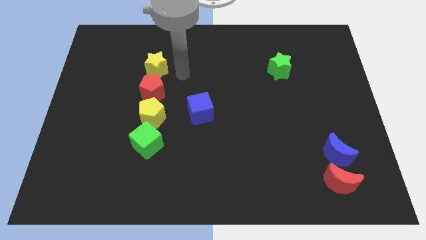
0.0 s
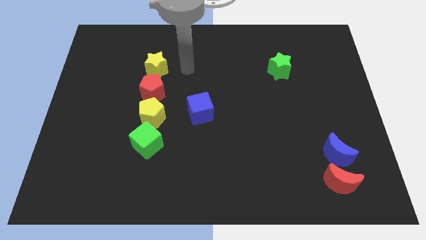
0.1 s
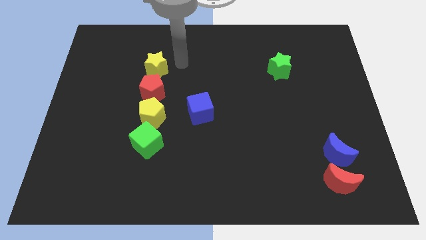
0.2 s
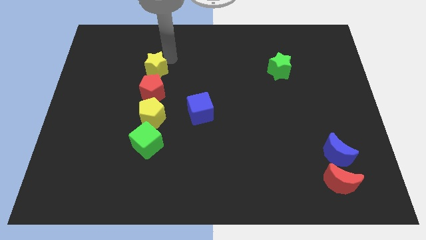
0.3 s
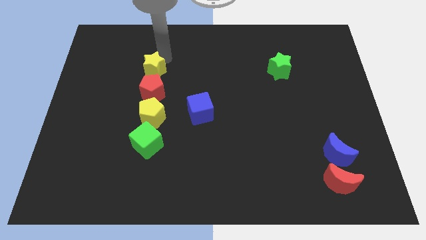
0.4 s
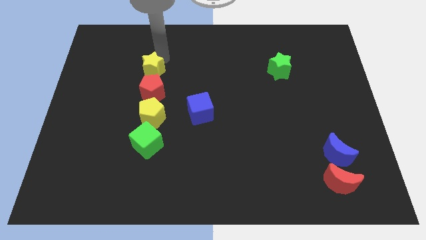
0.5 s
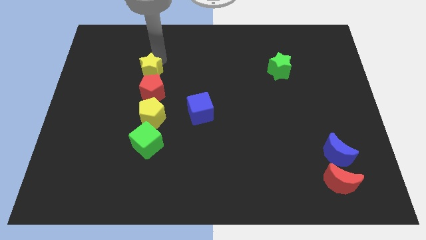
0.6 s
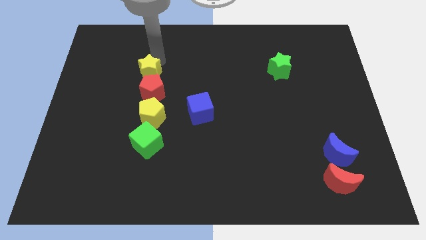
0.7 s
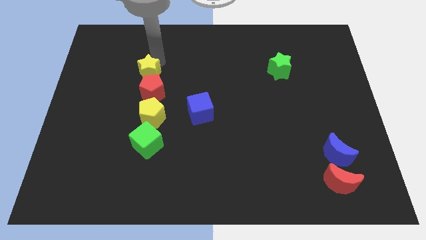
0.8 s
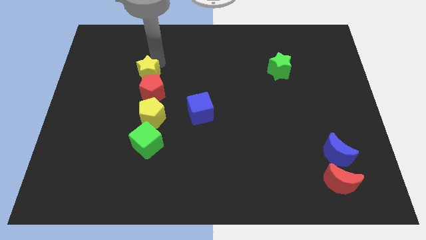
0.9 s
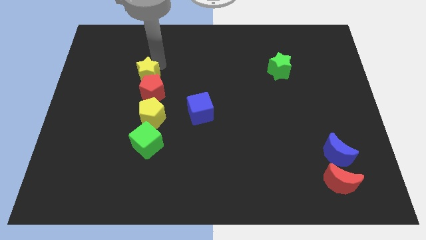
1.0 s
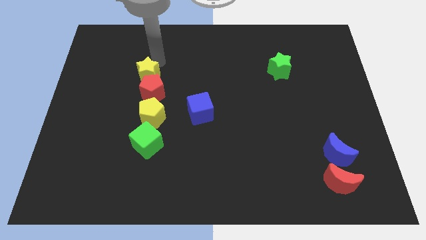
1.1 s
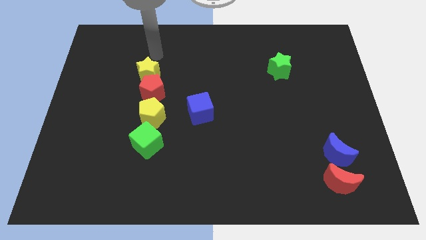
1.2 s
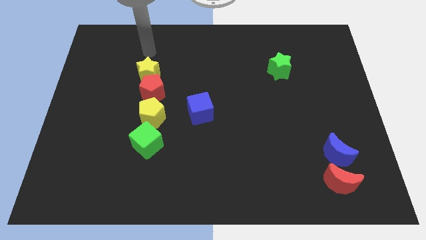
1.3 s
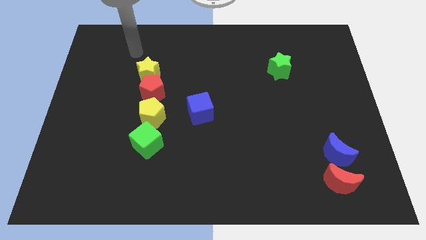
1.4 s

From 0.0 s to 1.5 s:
push the yellow star into red pentagon

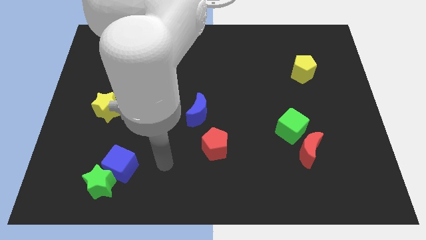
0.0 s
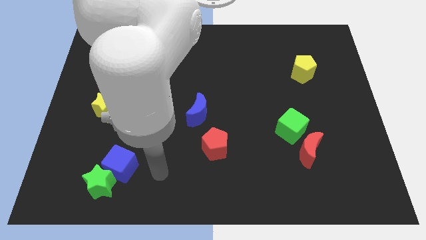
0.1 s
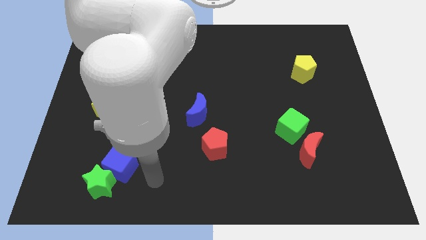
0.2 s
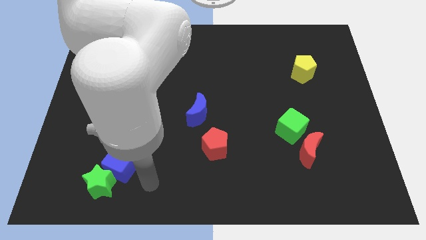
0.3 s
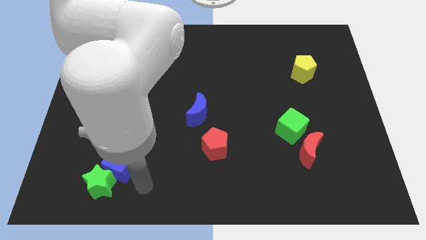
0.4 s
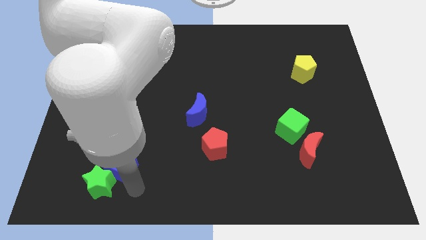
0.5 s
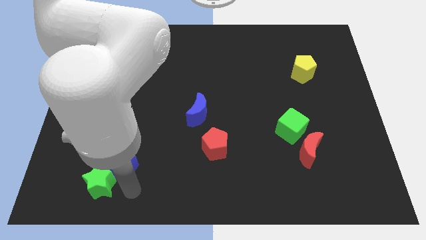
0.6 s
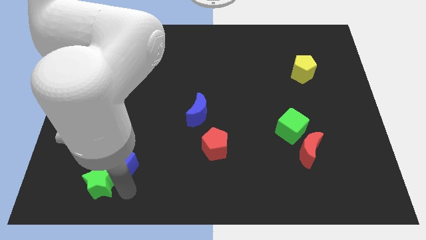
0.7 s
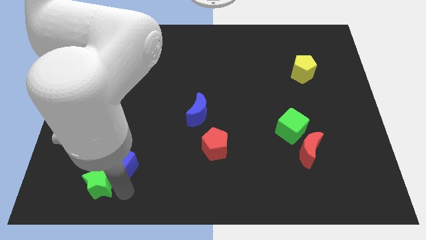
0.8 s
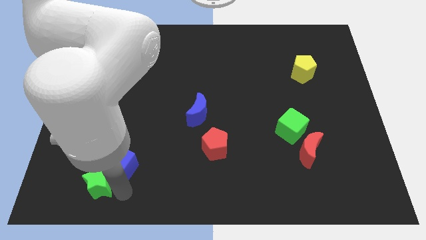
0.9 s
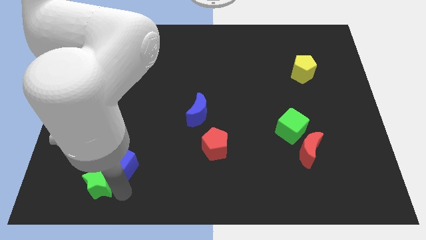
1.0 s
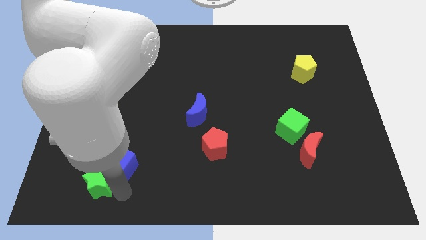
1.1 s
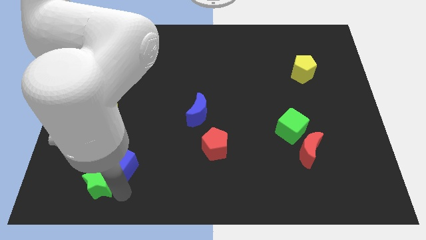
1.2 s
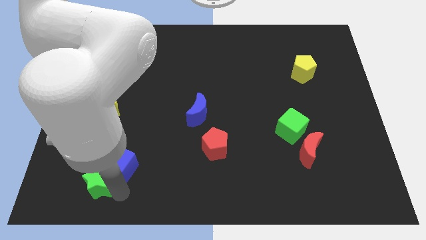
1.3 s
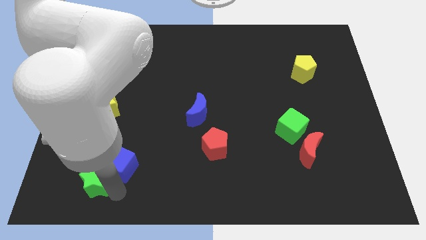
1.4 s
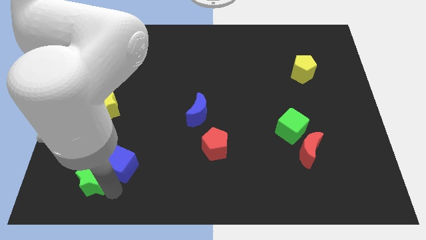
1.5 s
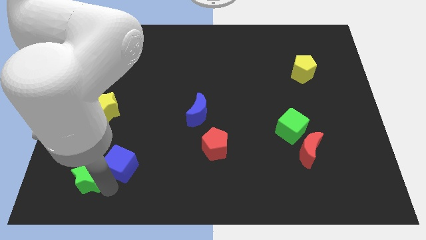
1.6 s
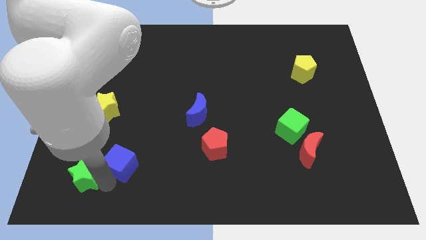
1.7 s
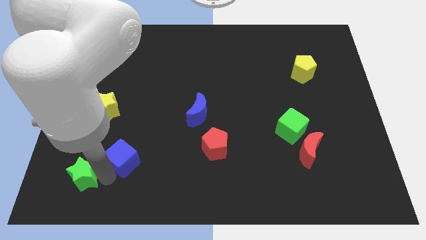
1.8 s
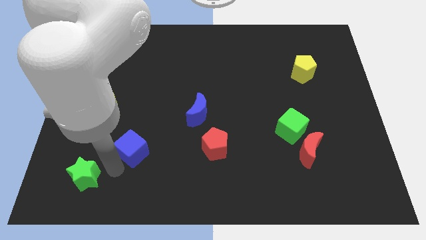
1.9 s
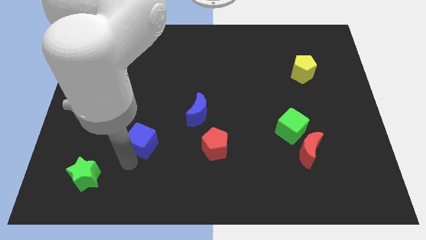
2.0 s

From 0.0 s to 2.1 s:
separate the green star and blue cube to each other

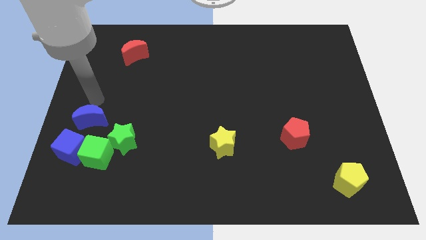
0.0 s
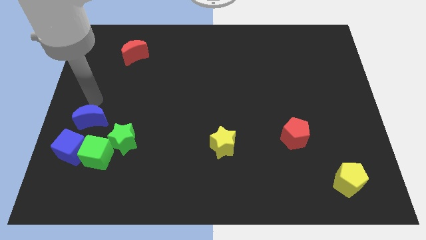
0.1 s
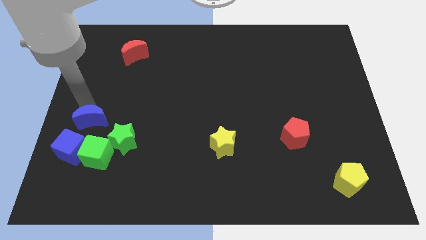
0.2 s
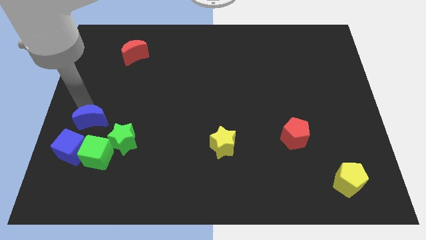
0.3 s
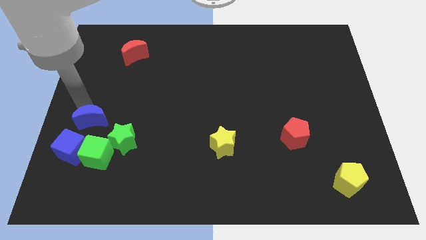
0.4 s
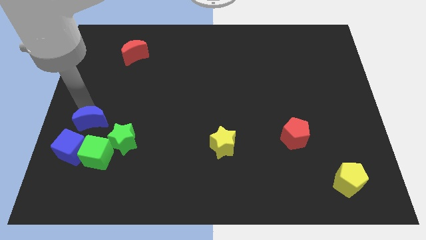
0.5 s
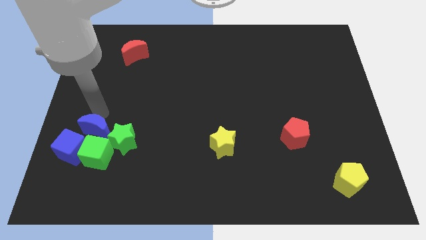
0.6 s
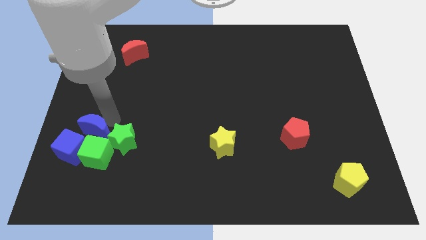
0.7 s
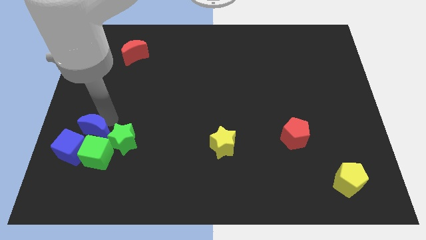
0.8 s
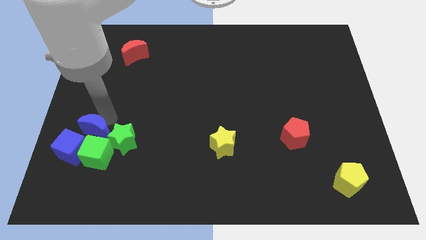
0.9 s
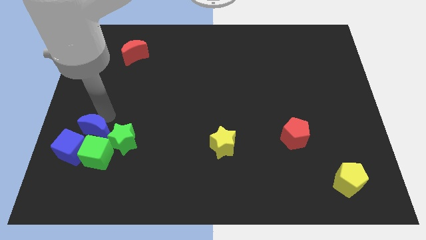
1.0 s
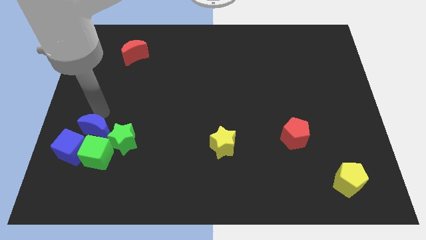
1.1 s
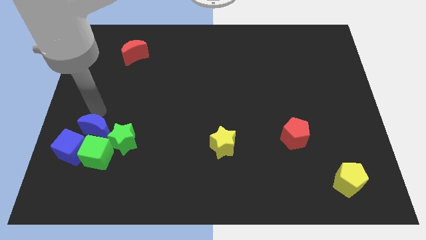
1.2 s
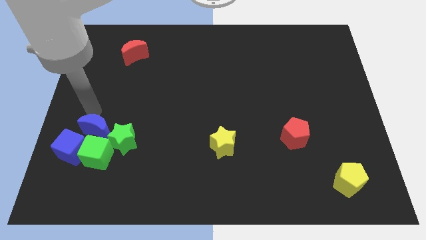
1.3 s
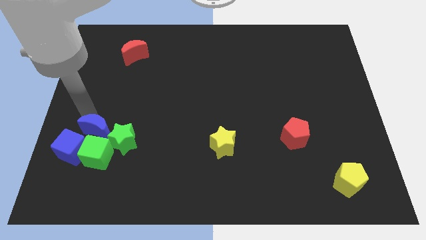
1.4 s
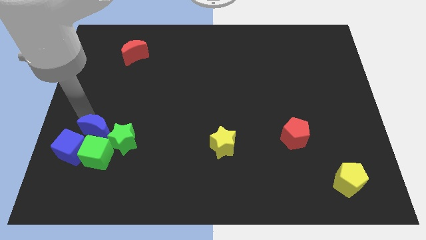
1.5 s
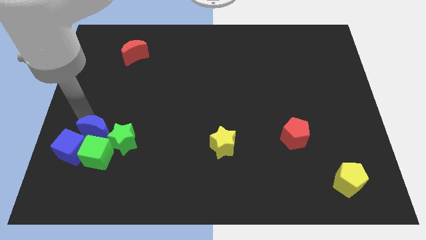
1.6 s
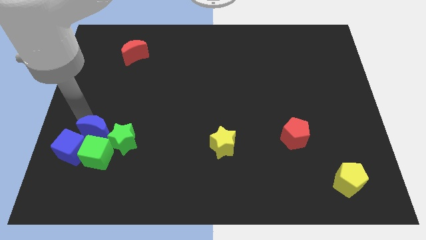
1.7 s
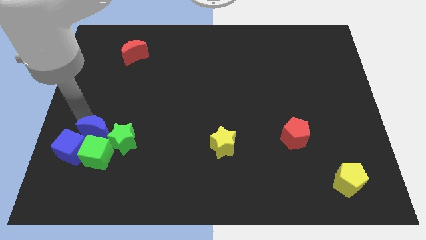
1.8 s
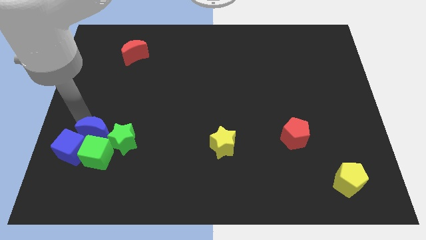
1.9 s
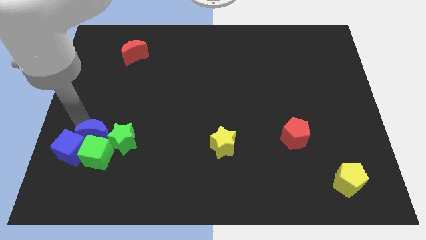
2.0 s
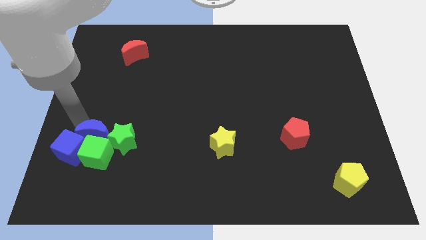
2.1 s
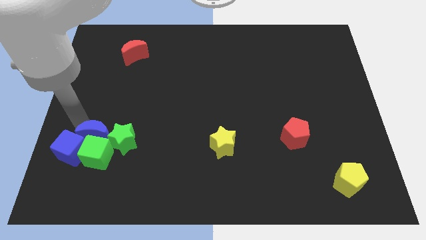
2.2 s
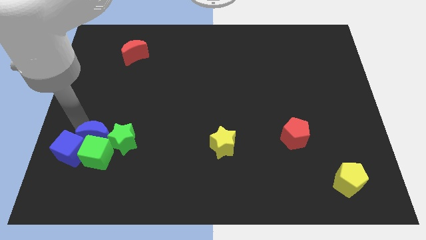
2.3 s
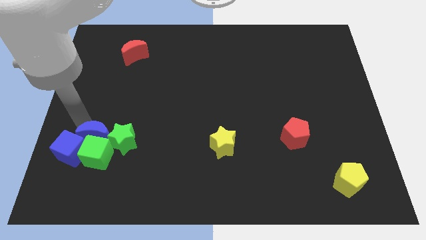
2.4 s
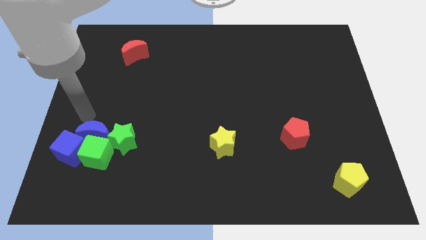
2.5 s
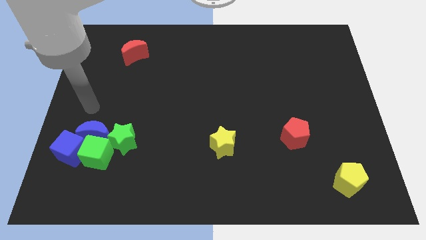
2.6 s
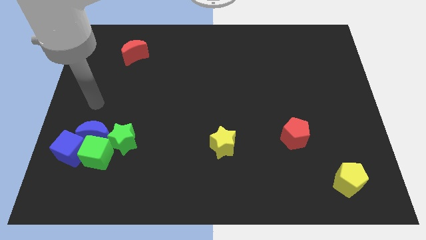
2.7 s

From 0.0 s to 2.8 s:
push the blue moon into blue and green cubes on top

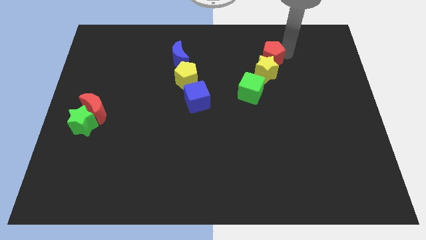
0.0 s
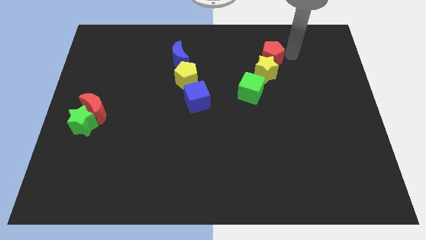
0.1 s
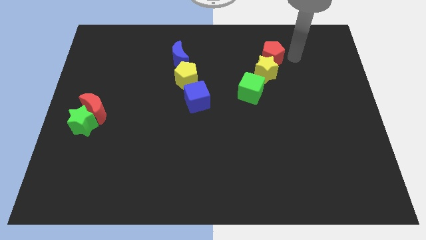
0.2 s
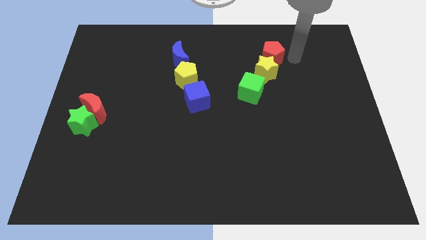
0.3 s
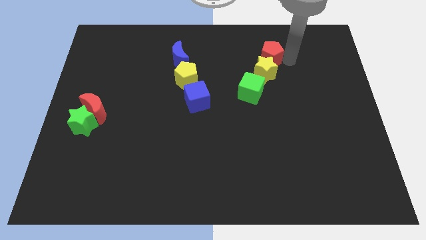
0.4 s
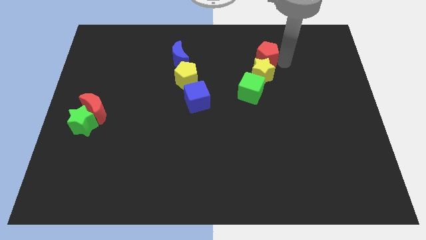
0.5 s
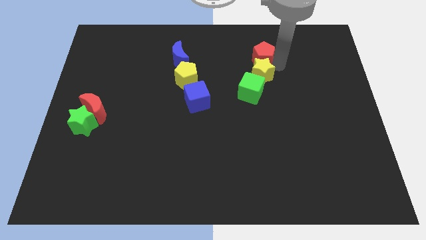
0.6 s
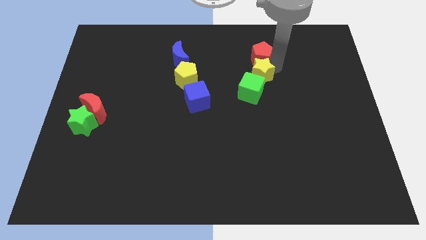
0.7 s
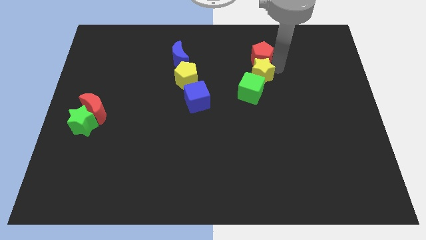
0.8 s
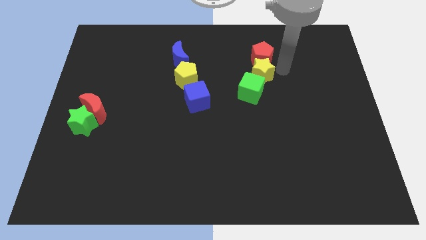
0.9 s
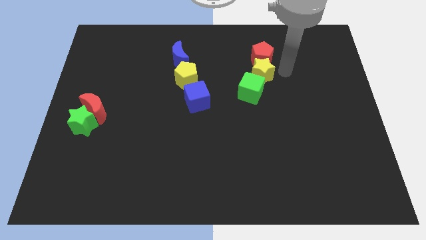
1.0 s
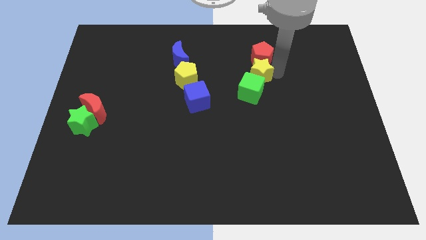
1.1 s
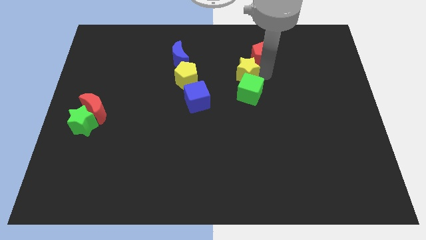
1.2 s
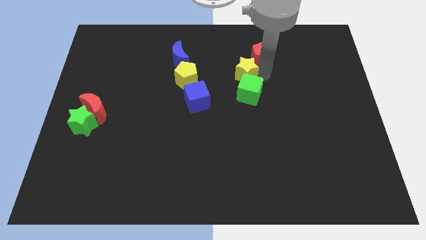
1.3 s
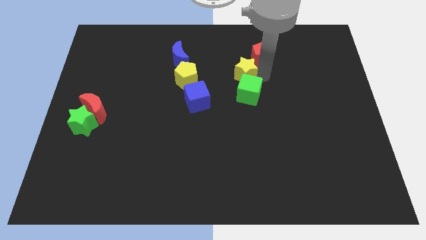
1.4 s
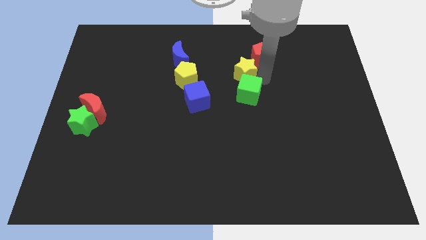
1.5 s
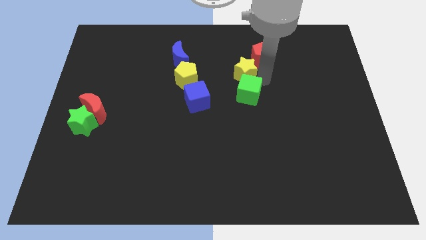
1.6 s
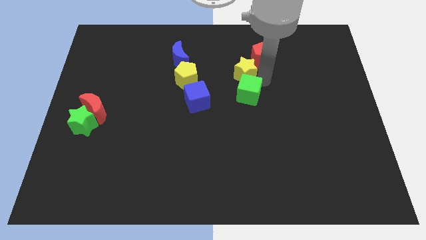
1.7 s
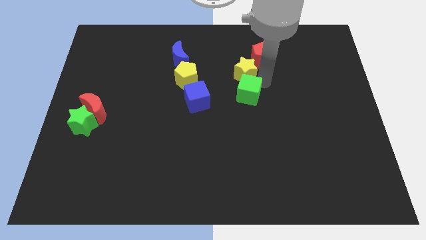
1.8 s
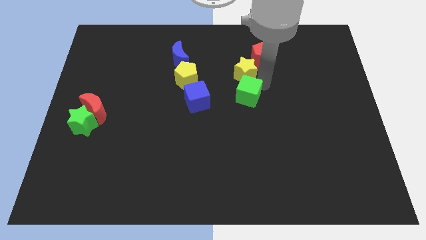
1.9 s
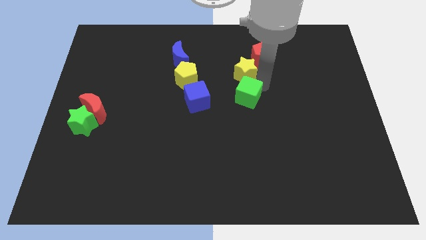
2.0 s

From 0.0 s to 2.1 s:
slightly adjust the red pentagon yellow star green cube towards left side

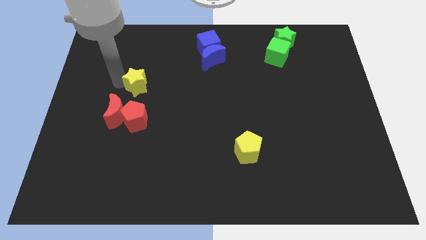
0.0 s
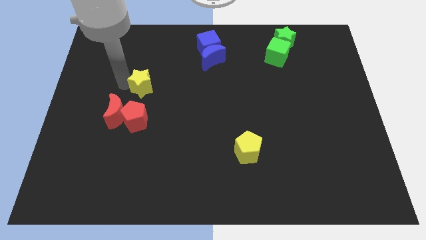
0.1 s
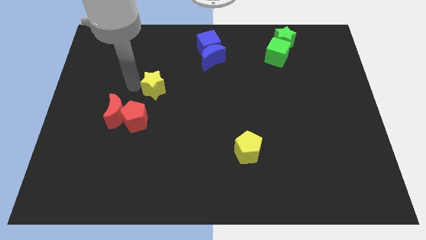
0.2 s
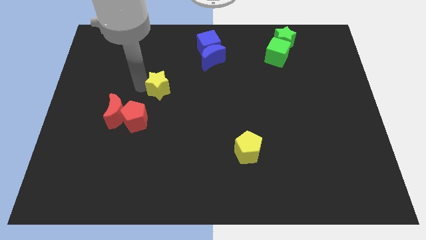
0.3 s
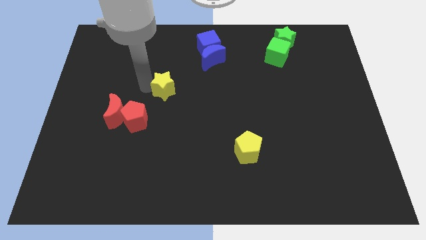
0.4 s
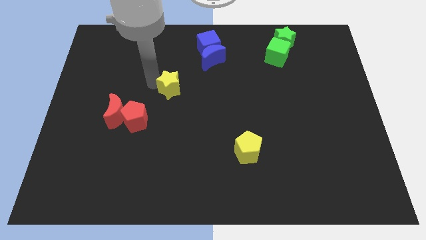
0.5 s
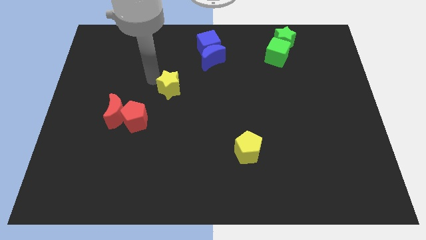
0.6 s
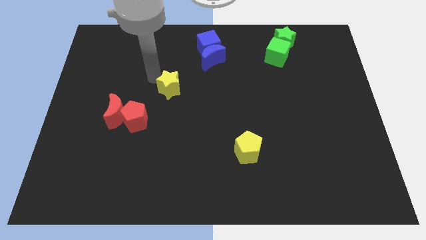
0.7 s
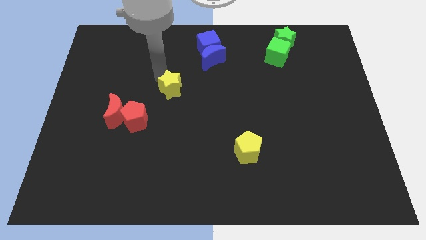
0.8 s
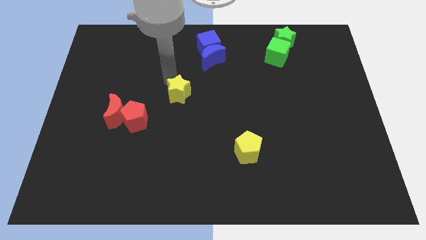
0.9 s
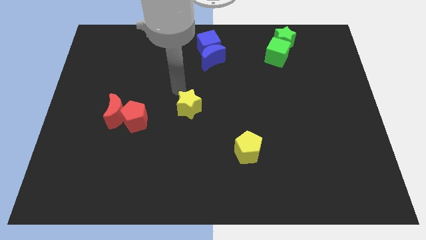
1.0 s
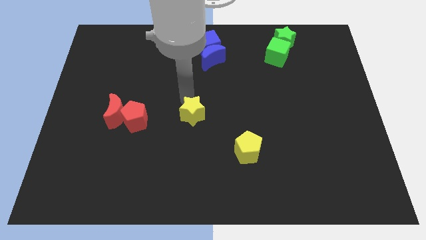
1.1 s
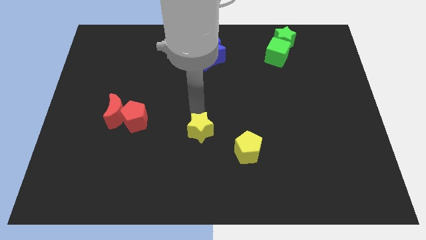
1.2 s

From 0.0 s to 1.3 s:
move the yellow star towards the yellow pentagon
